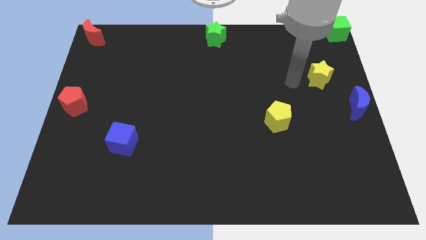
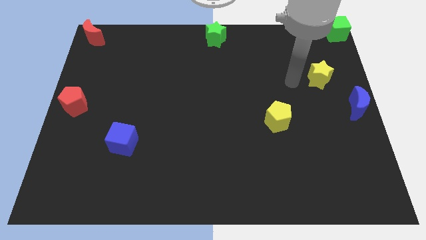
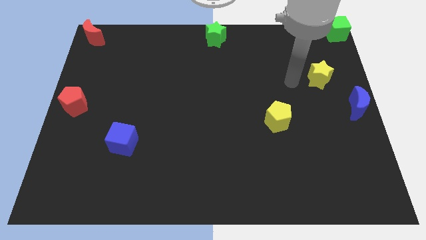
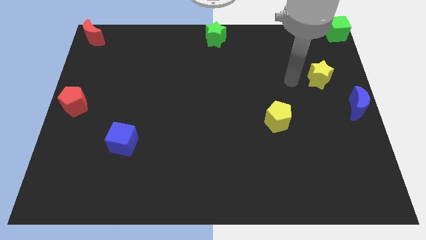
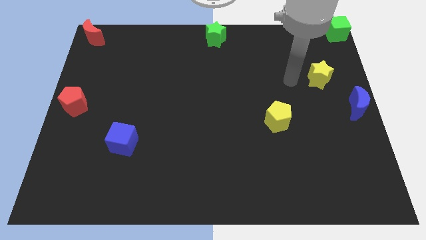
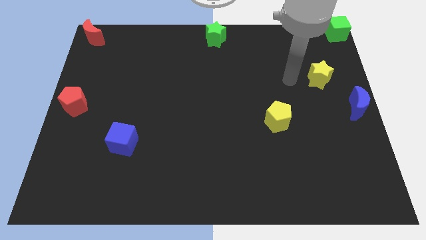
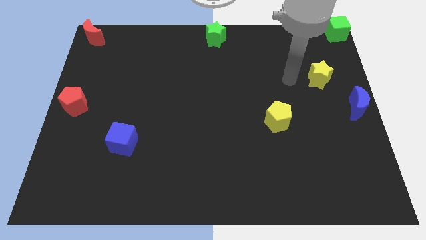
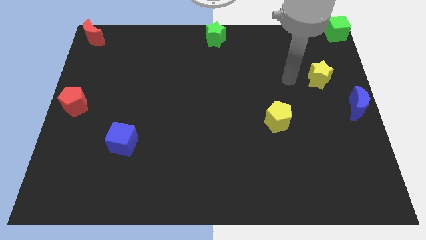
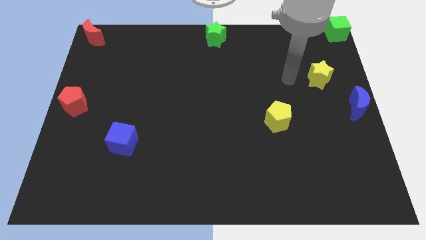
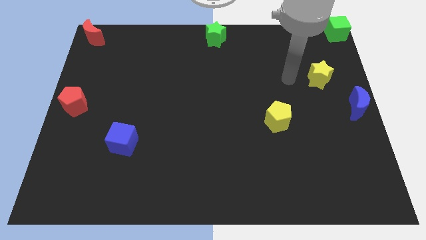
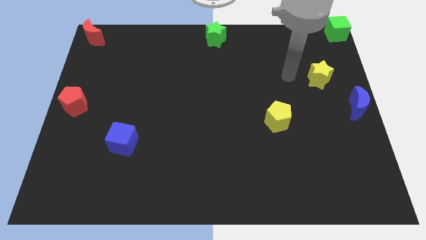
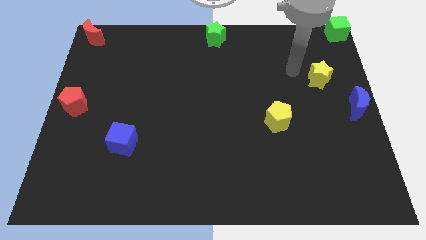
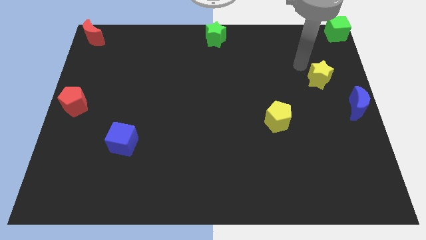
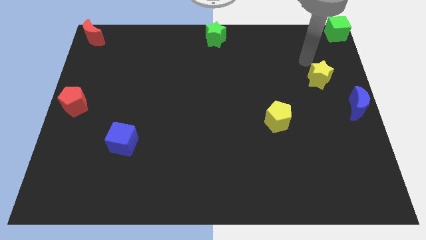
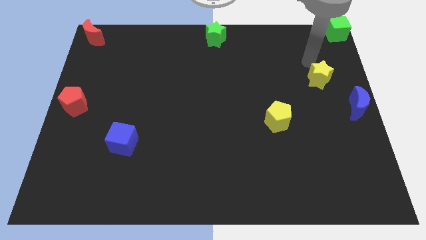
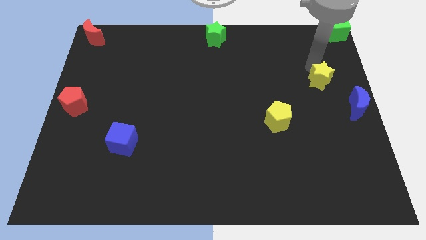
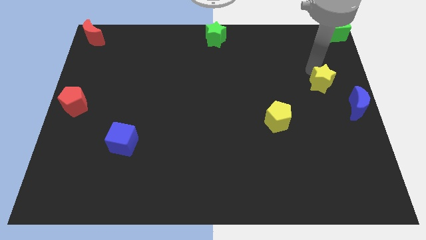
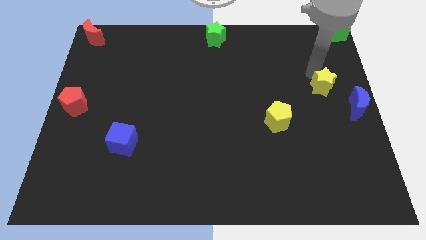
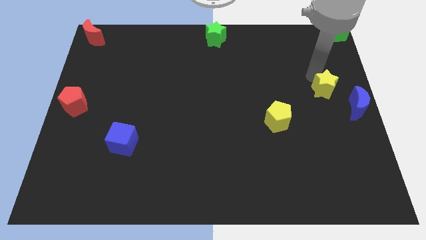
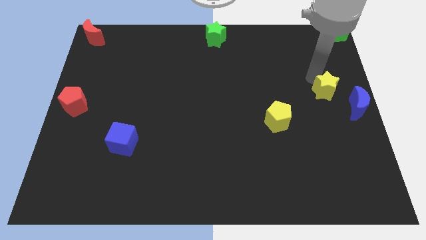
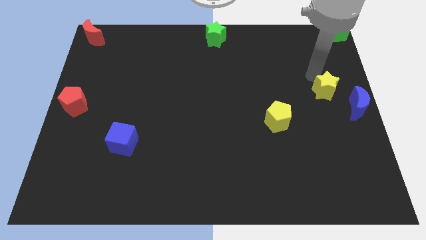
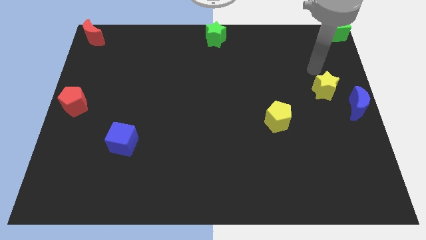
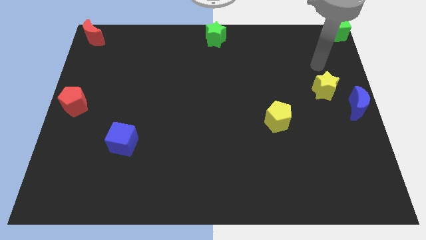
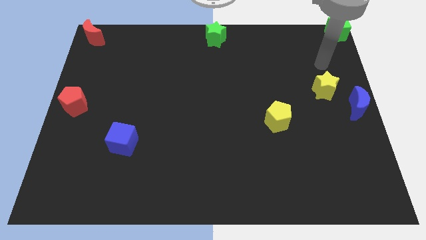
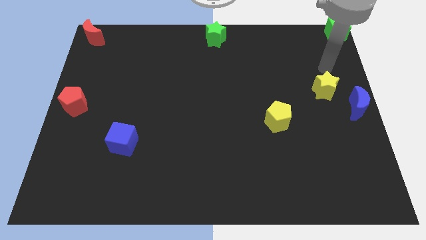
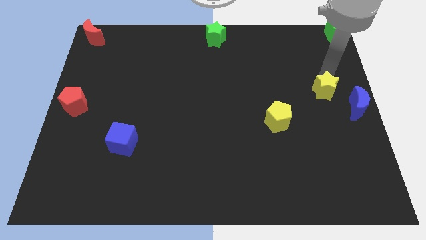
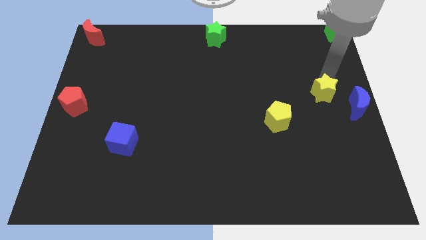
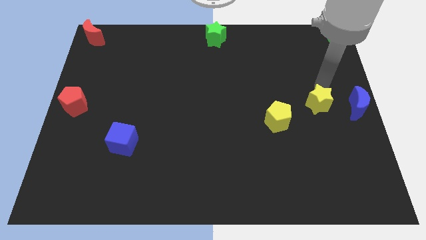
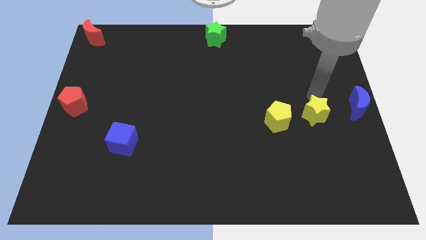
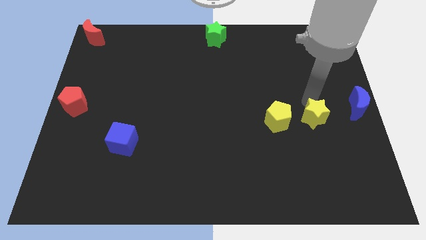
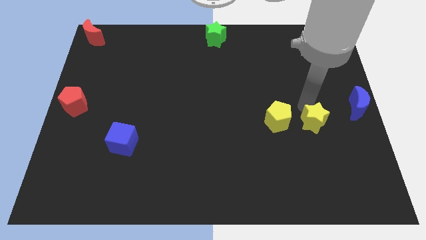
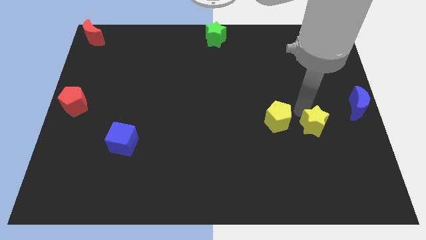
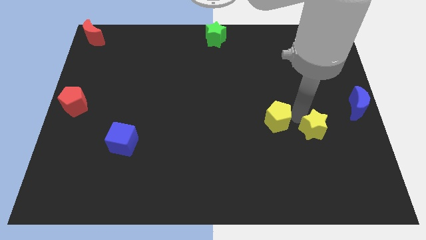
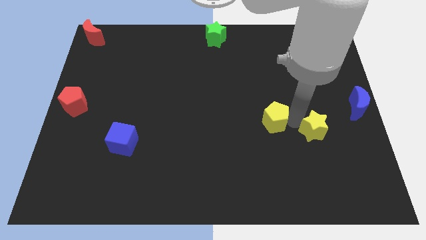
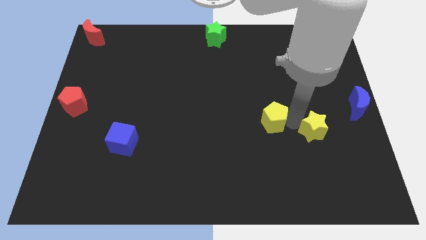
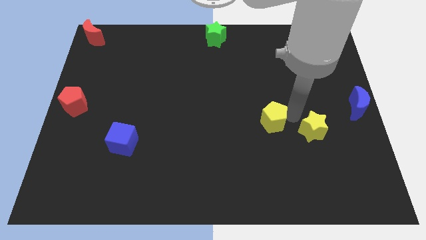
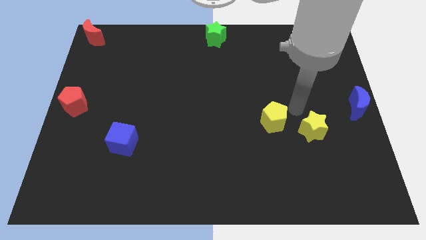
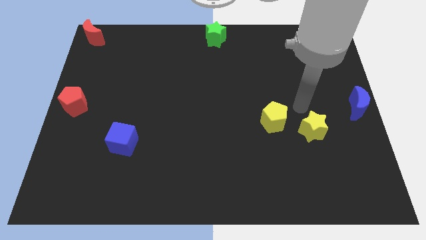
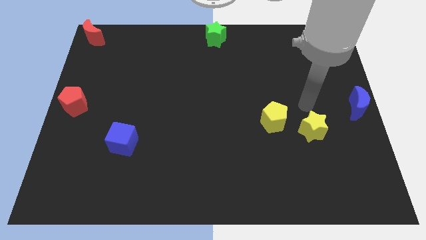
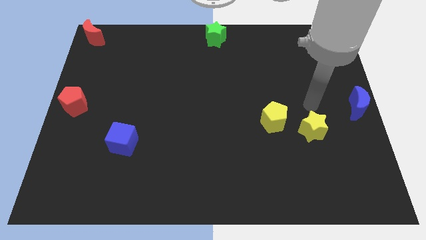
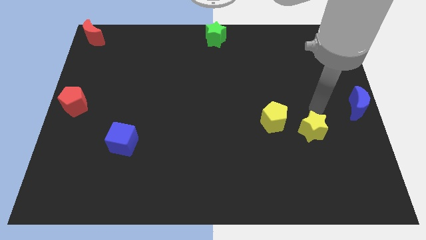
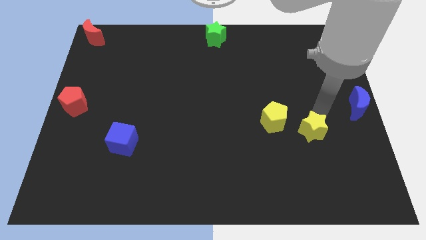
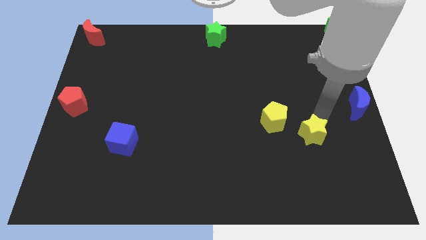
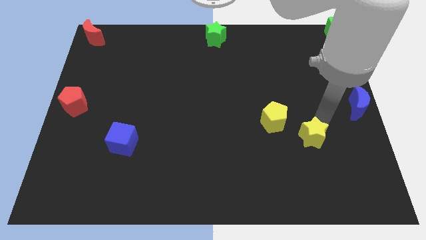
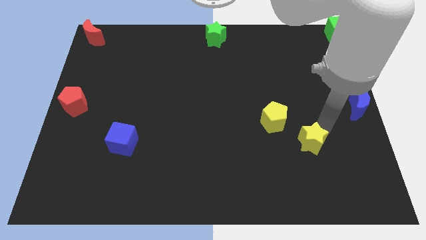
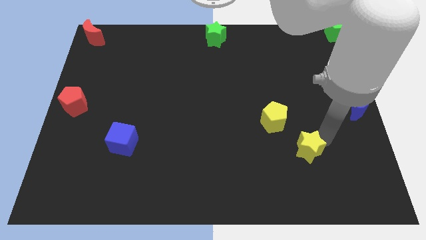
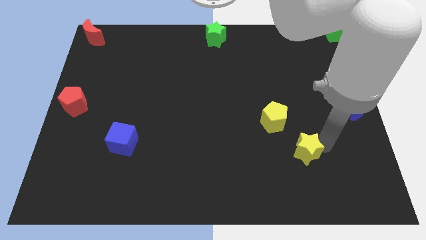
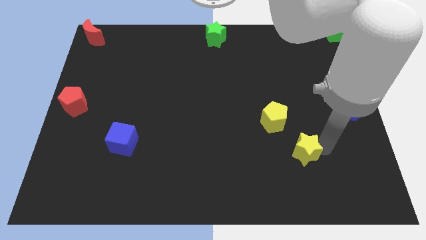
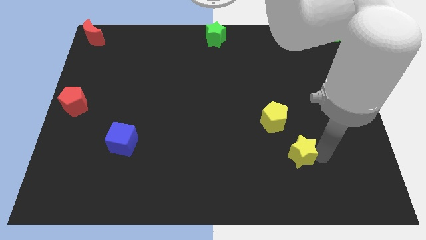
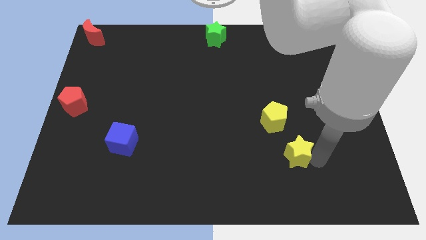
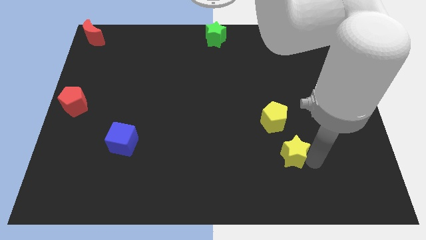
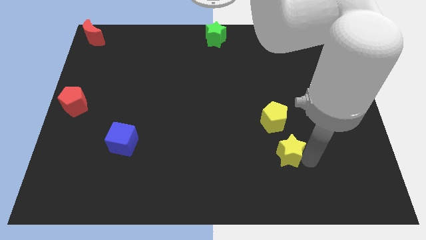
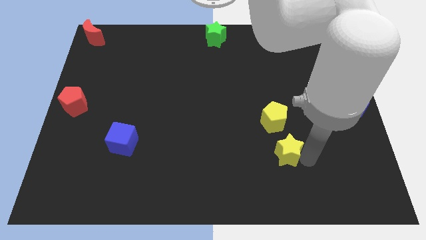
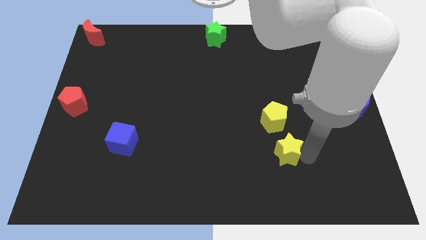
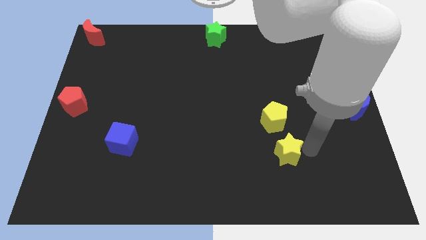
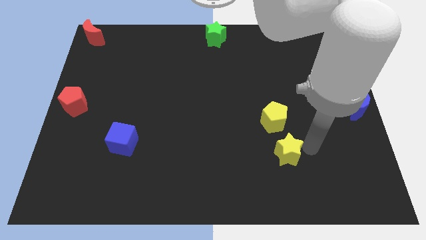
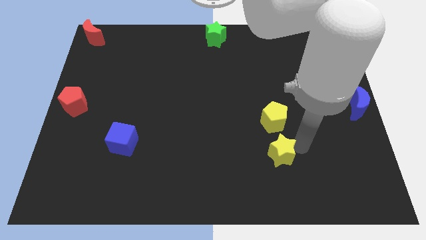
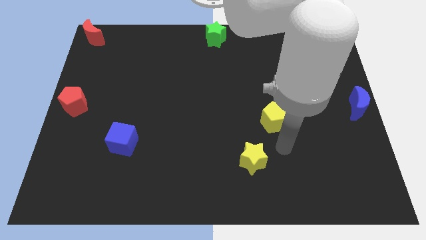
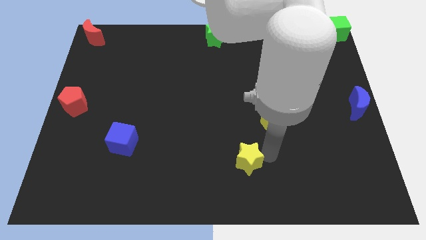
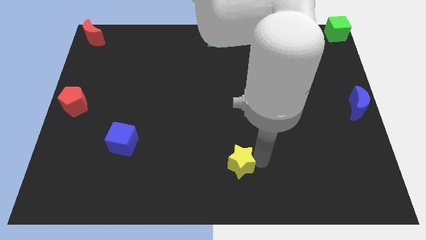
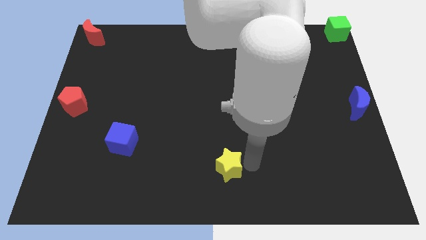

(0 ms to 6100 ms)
move the yellow star to the left of the board

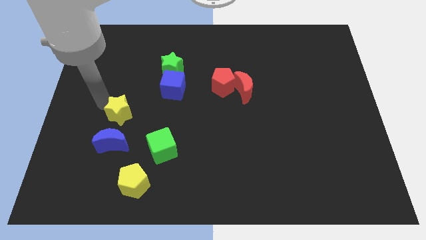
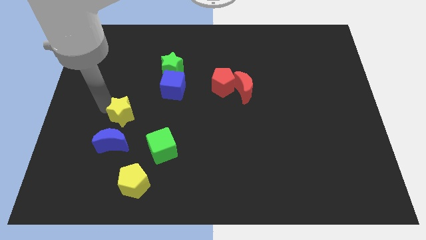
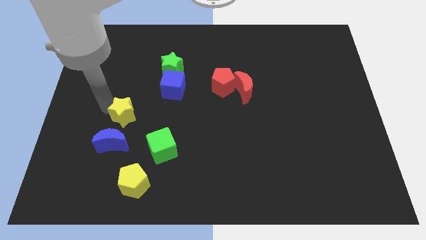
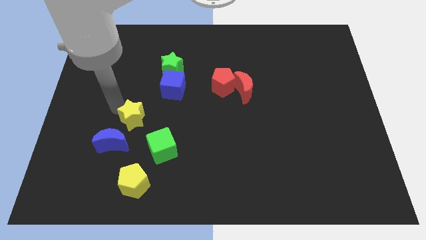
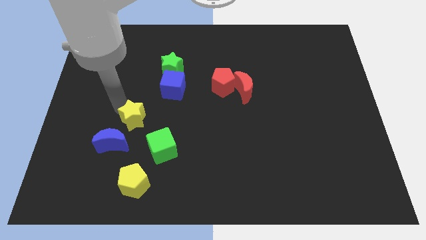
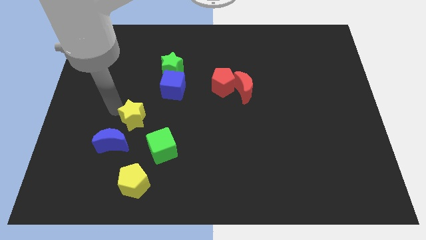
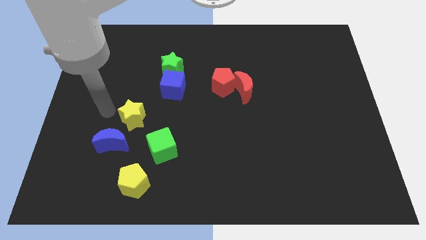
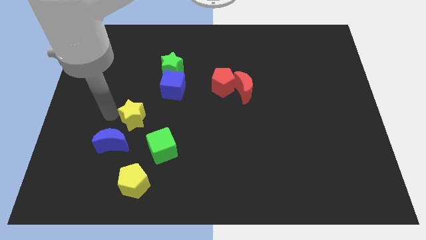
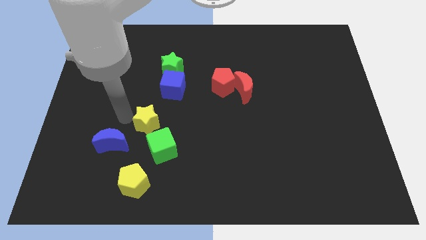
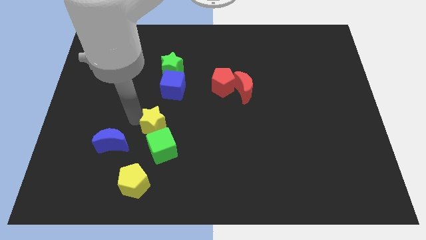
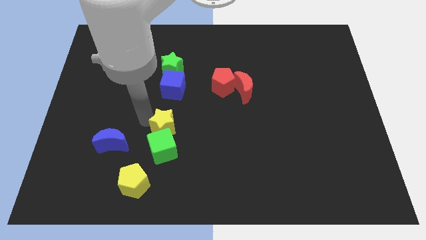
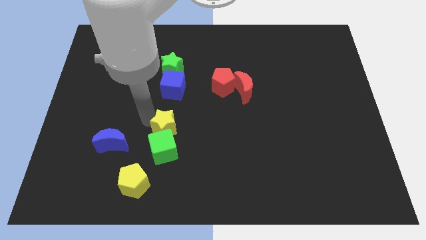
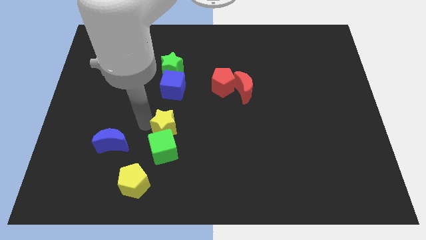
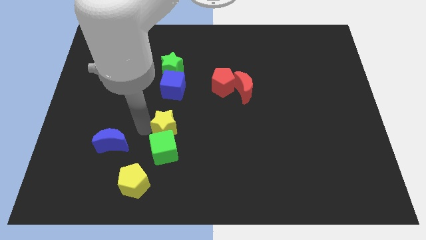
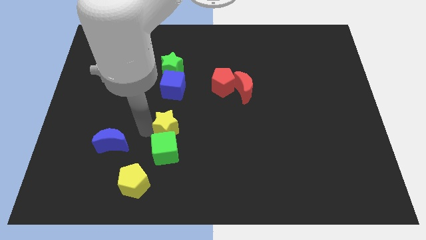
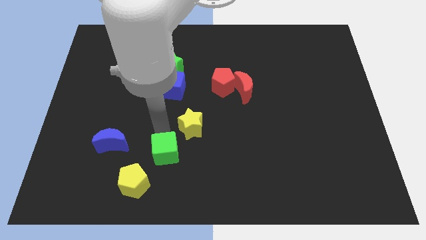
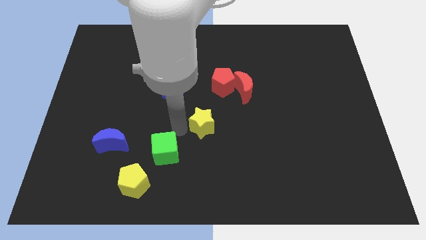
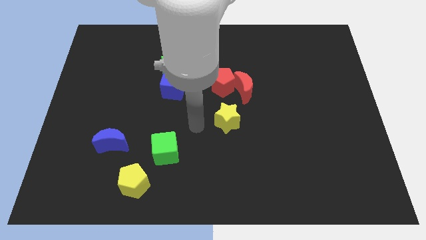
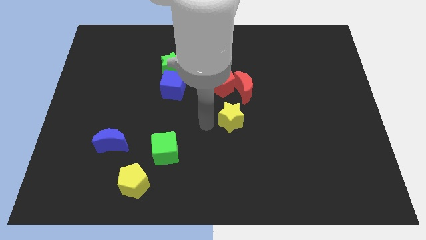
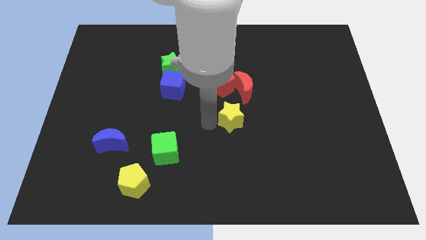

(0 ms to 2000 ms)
place a yellow star close to the red moon

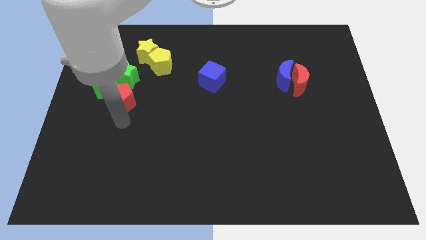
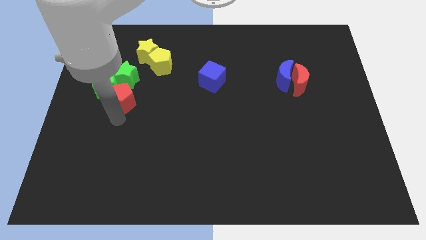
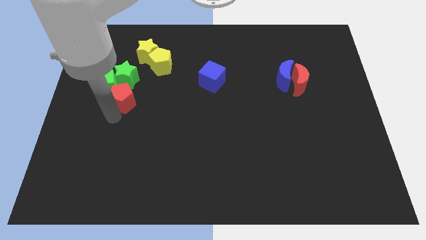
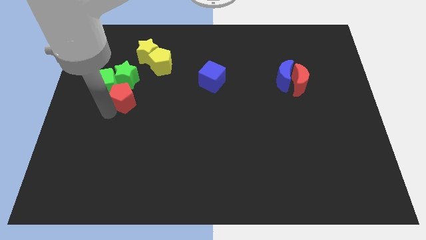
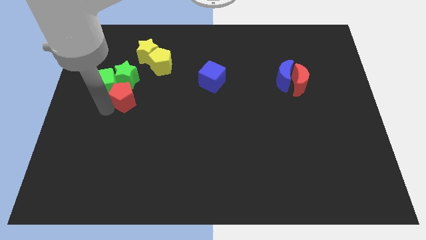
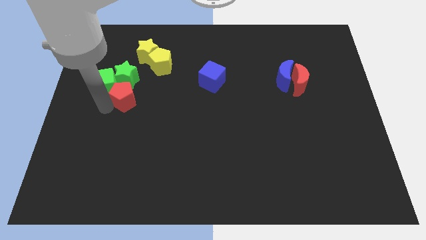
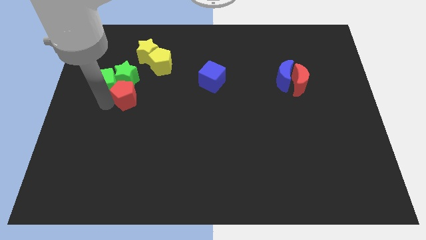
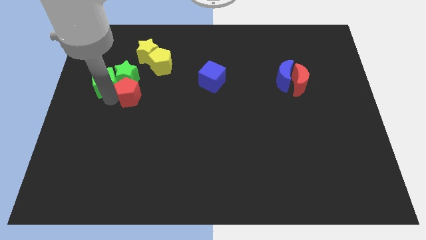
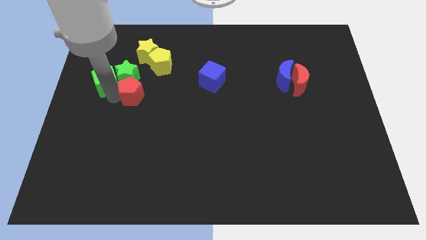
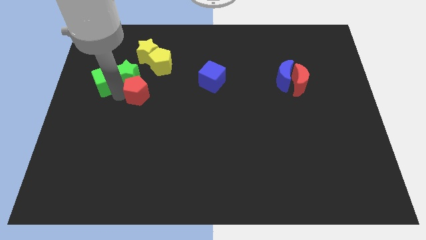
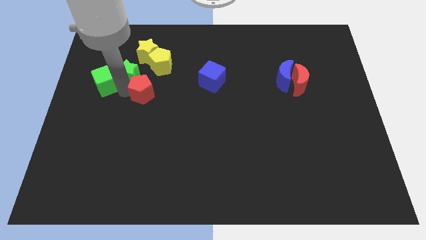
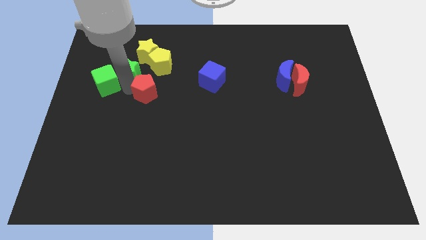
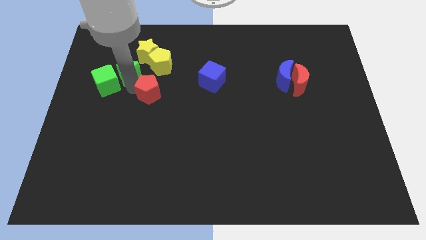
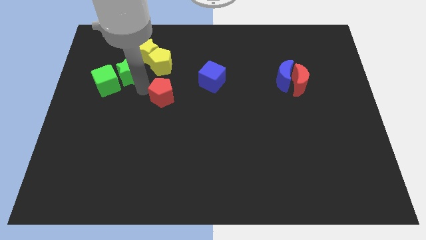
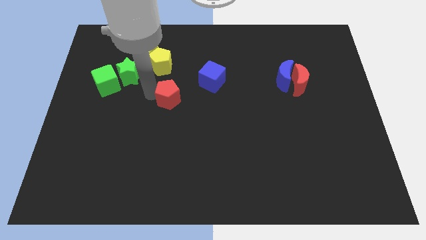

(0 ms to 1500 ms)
move the red pentagon to the bottom of the yellow pentagon
